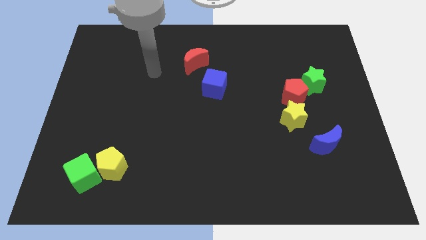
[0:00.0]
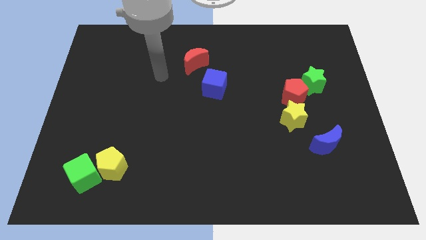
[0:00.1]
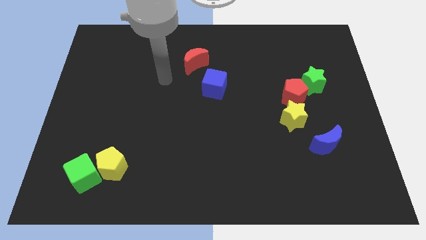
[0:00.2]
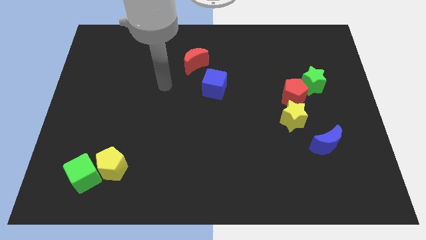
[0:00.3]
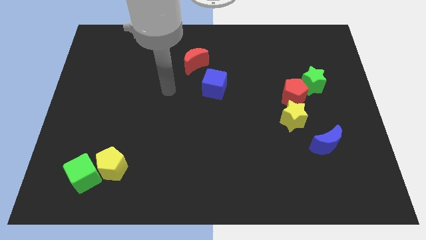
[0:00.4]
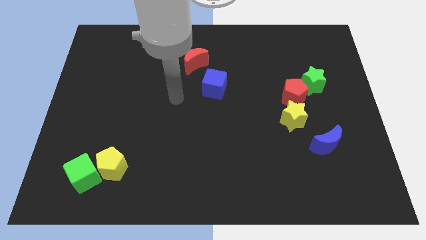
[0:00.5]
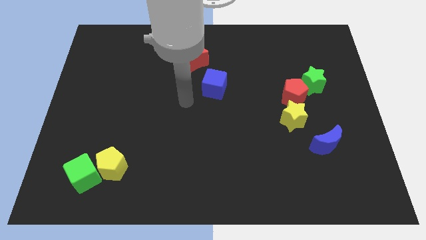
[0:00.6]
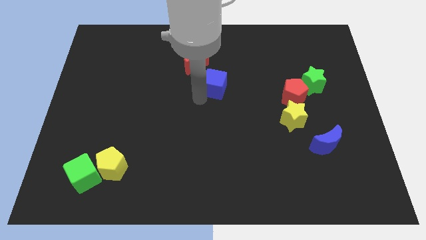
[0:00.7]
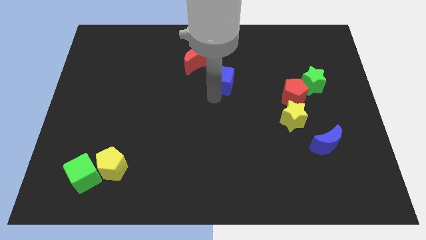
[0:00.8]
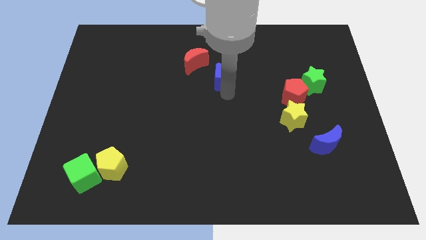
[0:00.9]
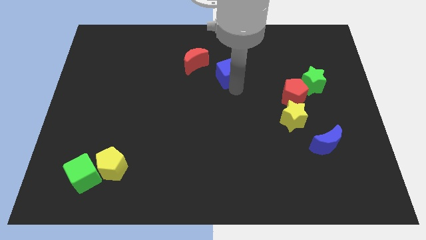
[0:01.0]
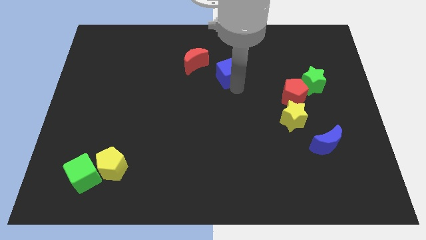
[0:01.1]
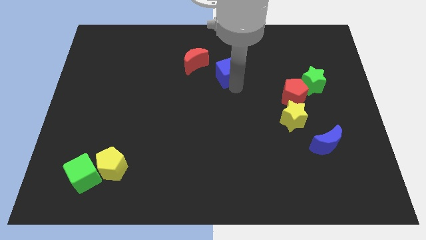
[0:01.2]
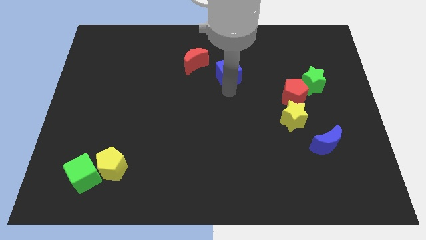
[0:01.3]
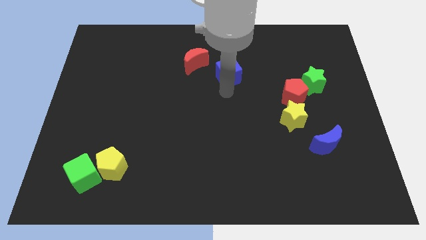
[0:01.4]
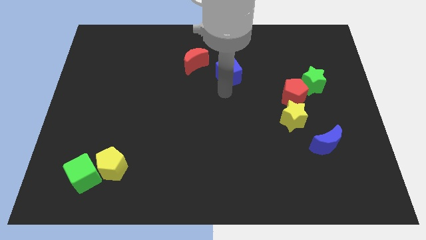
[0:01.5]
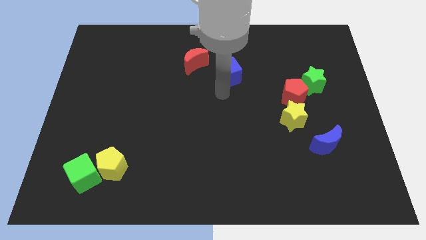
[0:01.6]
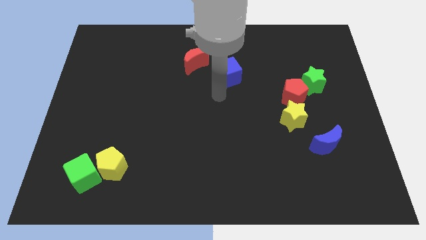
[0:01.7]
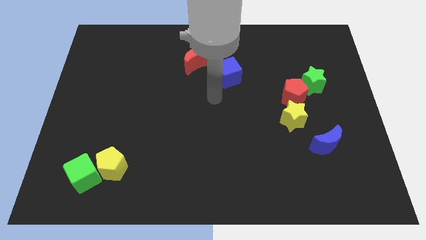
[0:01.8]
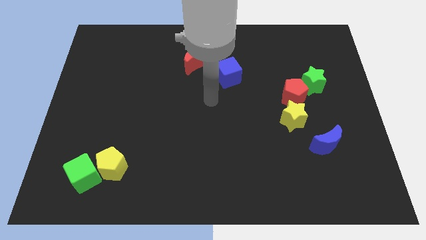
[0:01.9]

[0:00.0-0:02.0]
place the blue cube slightly upwards

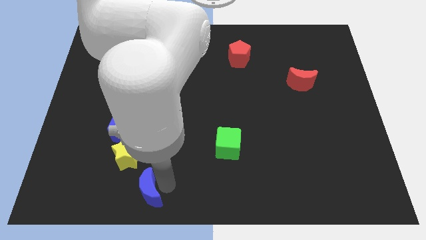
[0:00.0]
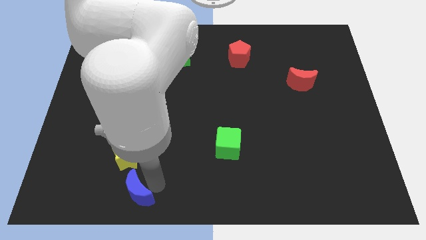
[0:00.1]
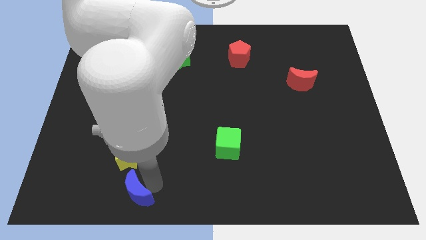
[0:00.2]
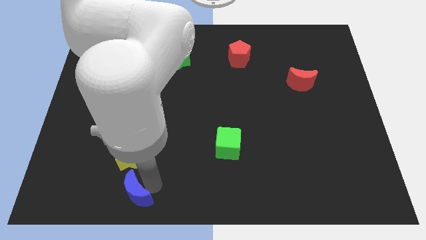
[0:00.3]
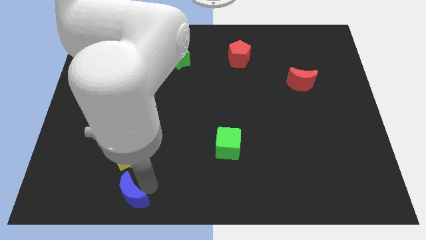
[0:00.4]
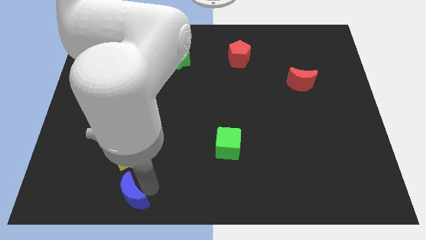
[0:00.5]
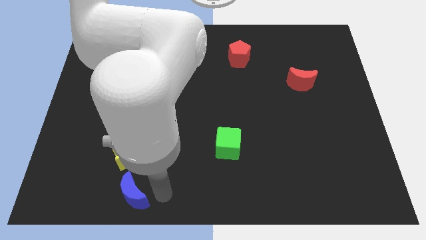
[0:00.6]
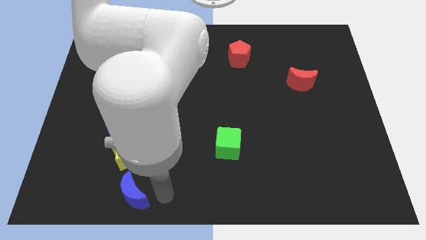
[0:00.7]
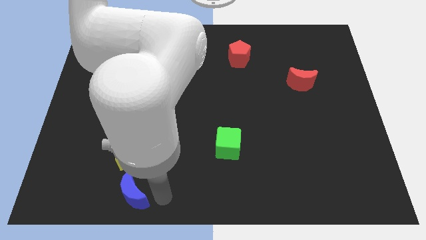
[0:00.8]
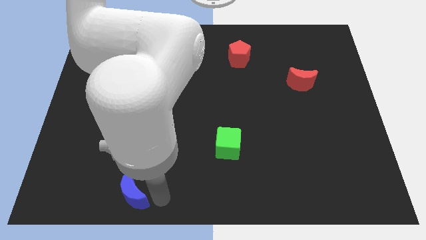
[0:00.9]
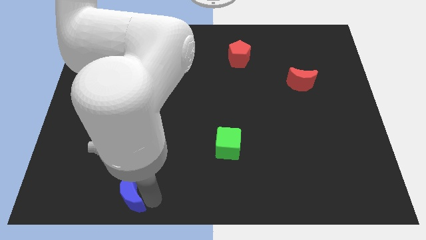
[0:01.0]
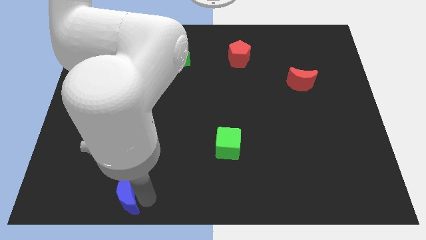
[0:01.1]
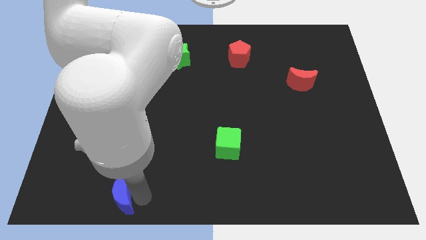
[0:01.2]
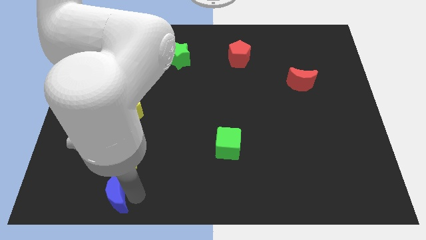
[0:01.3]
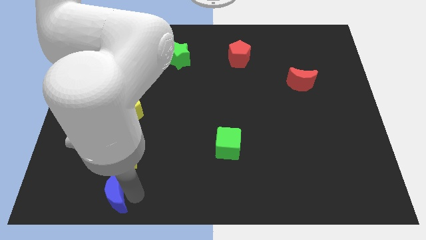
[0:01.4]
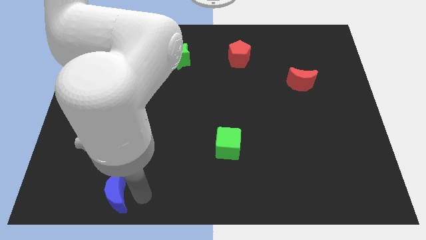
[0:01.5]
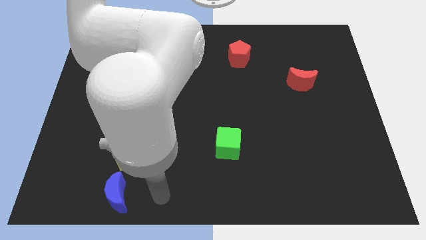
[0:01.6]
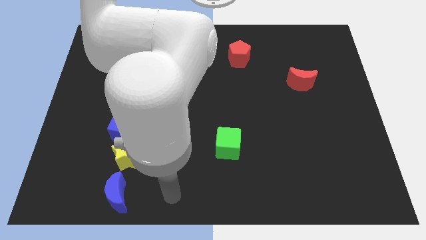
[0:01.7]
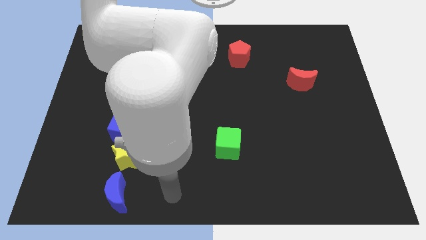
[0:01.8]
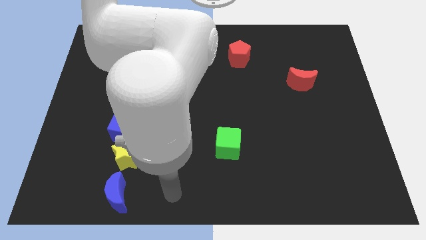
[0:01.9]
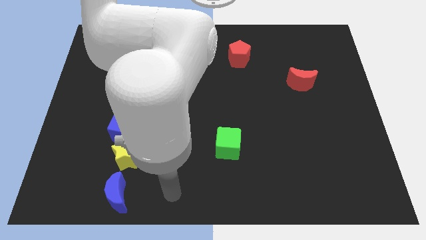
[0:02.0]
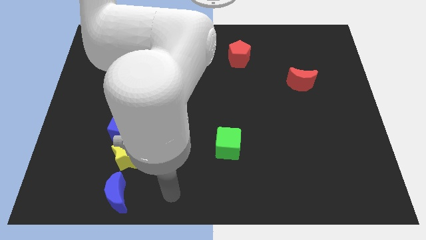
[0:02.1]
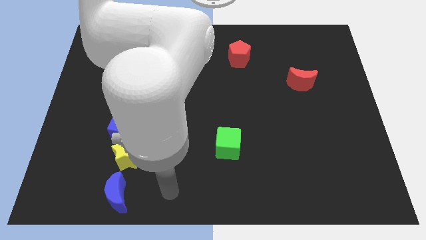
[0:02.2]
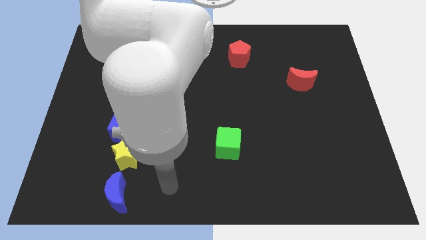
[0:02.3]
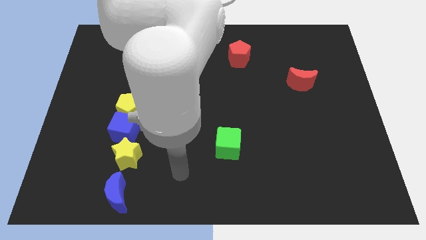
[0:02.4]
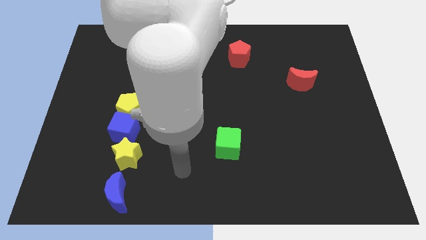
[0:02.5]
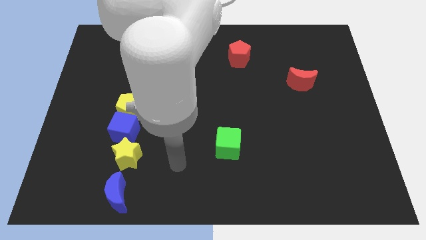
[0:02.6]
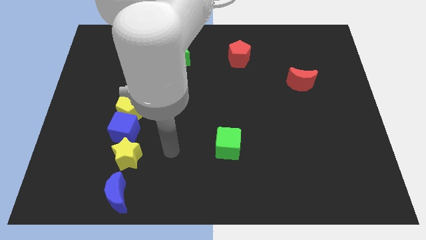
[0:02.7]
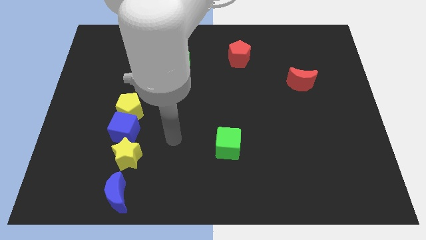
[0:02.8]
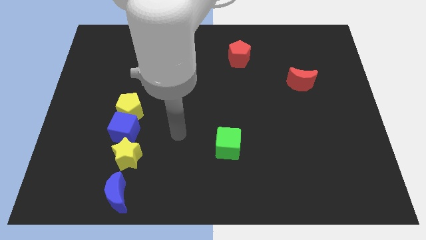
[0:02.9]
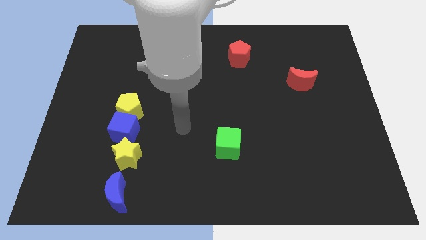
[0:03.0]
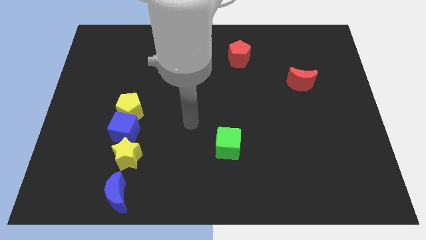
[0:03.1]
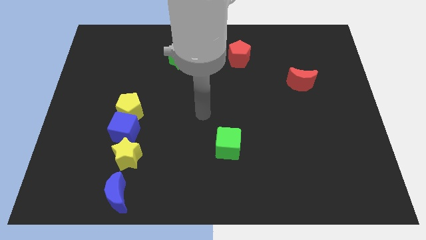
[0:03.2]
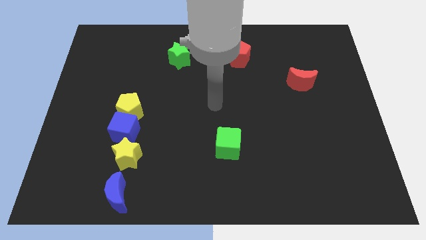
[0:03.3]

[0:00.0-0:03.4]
move the blue moon in a vertical line

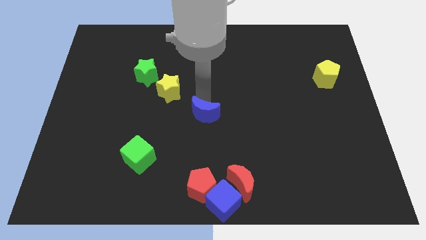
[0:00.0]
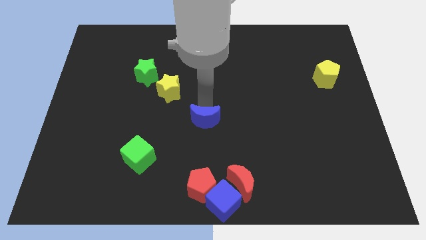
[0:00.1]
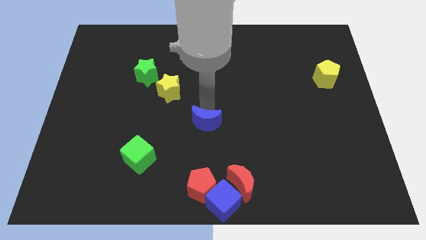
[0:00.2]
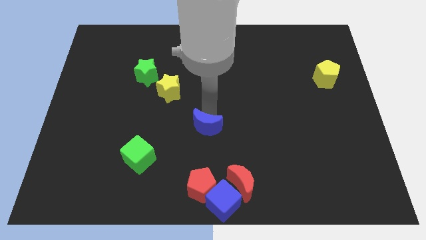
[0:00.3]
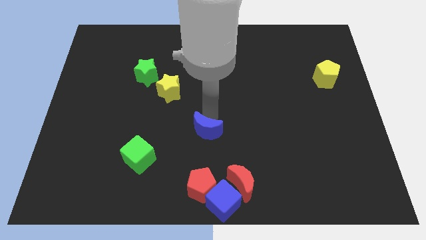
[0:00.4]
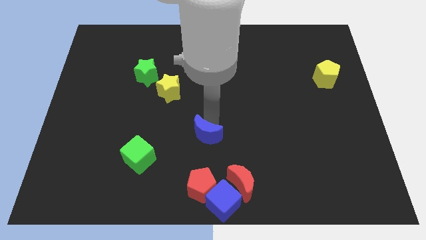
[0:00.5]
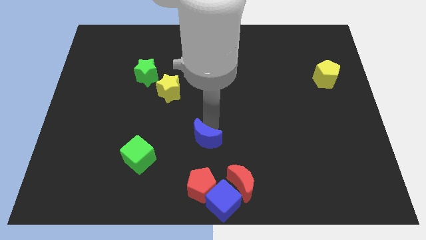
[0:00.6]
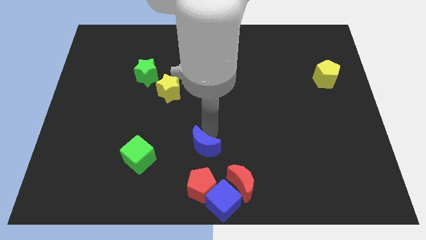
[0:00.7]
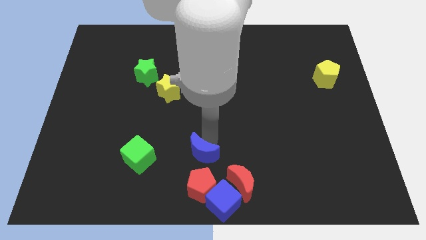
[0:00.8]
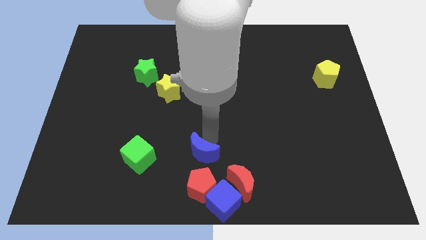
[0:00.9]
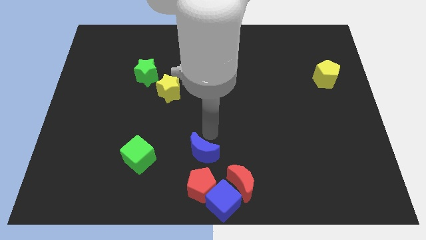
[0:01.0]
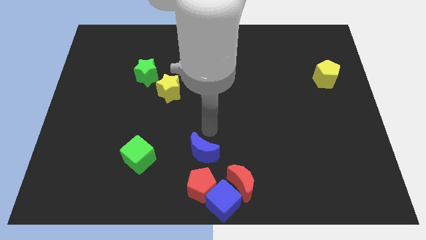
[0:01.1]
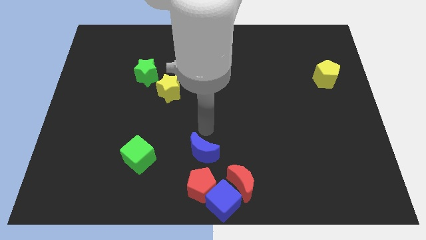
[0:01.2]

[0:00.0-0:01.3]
move the blue moon towards the group of blocks

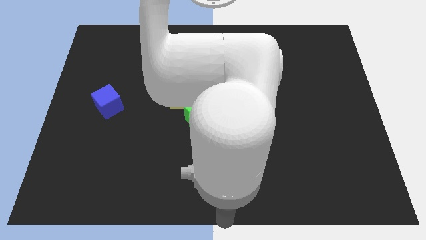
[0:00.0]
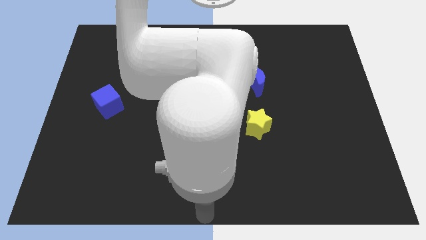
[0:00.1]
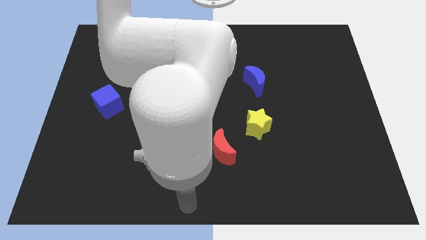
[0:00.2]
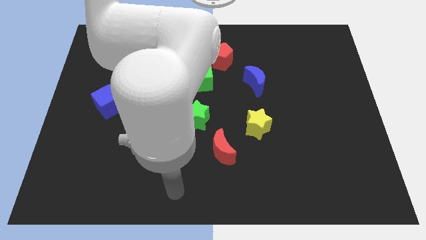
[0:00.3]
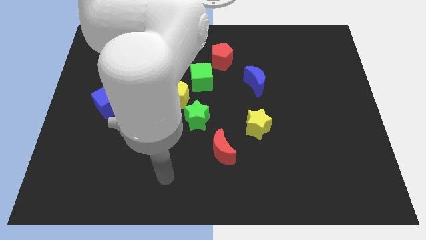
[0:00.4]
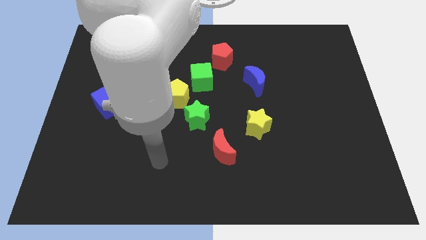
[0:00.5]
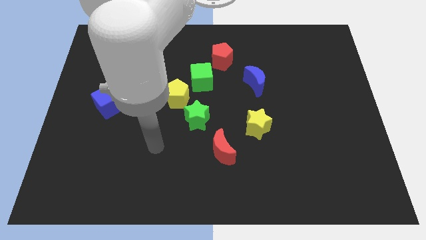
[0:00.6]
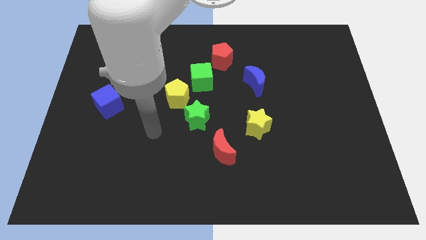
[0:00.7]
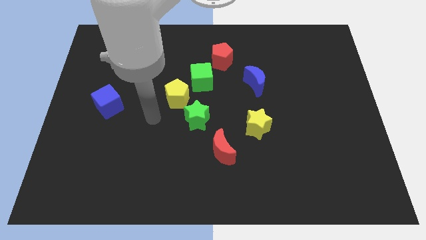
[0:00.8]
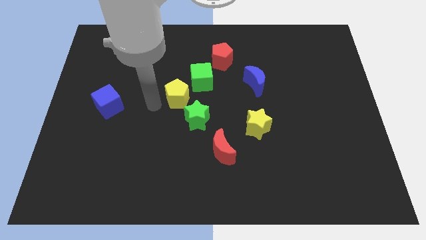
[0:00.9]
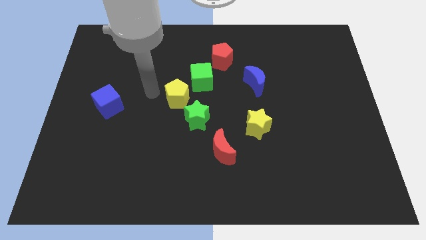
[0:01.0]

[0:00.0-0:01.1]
place the arm to the left of the yellow pentagon

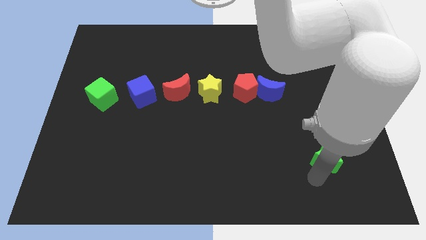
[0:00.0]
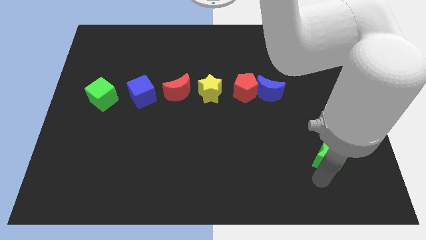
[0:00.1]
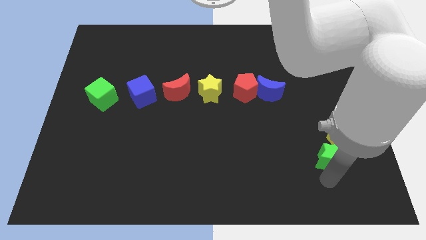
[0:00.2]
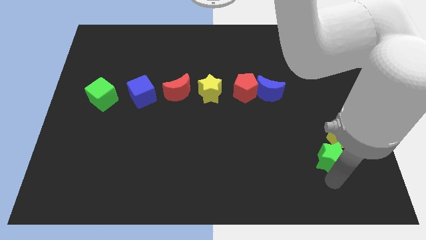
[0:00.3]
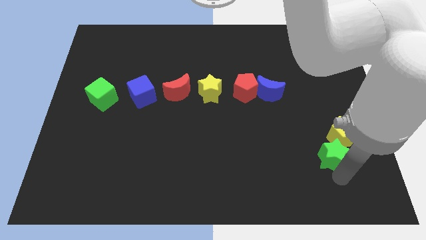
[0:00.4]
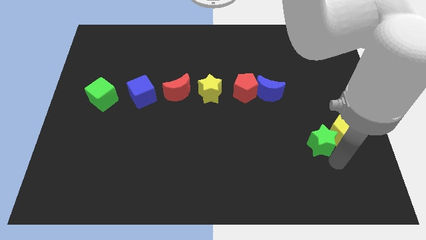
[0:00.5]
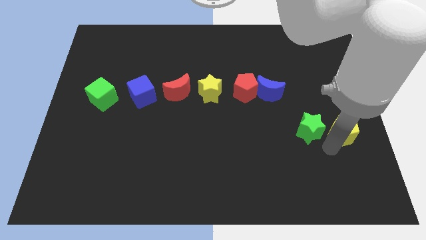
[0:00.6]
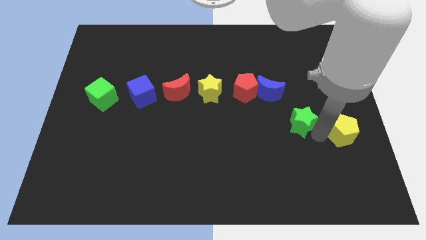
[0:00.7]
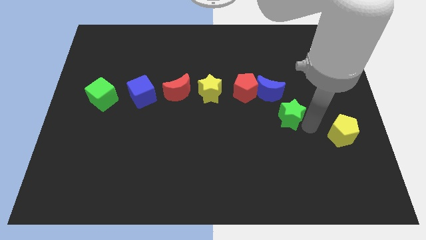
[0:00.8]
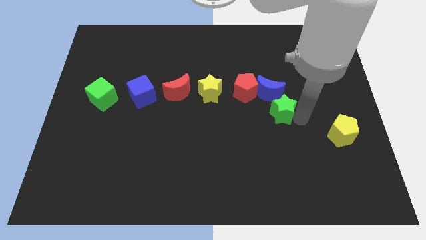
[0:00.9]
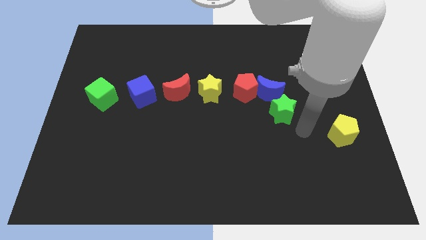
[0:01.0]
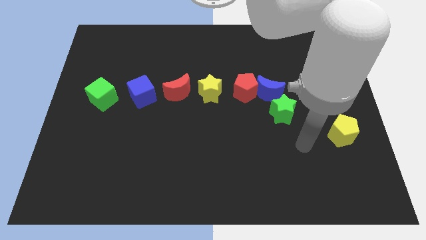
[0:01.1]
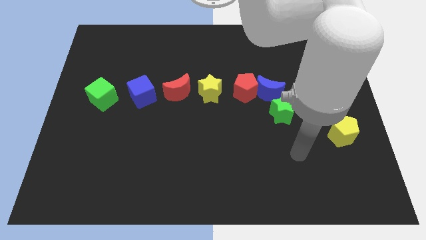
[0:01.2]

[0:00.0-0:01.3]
place the green star diagonally top left to the yellow pentagon
